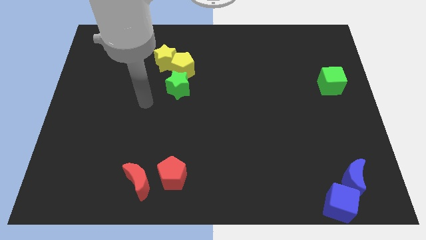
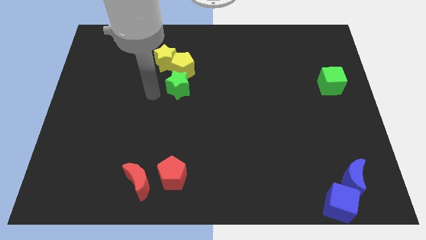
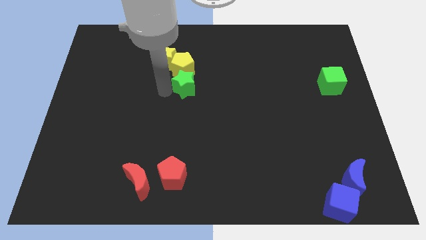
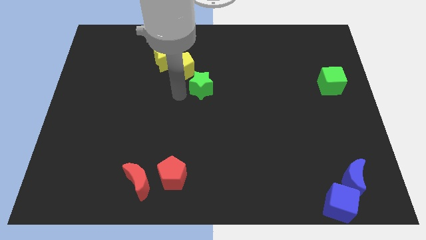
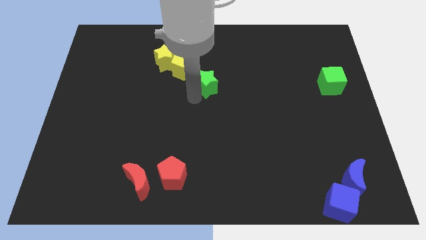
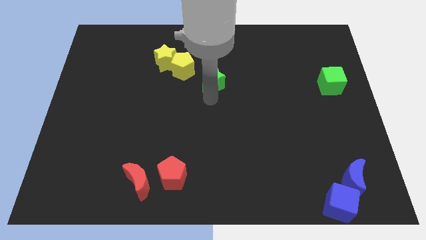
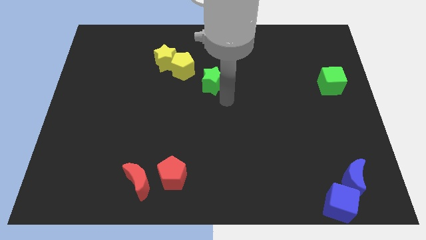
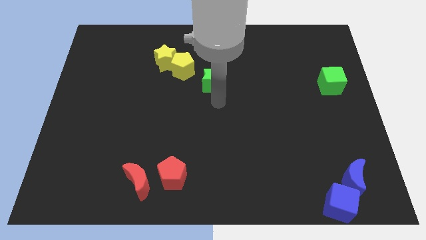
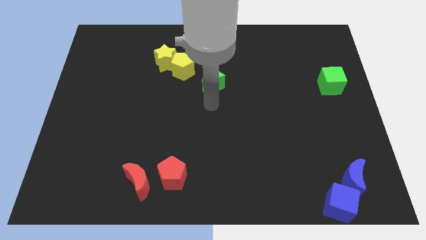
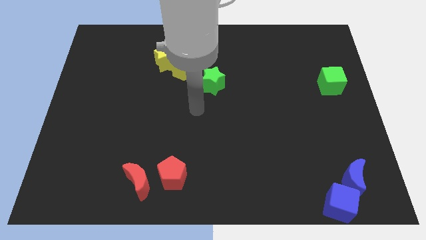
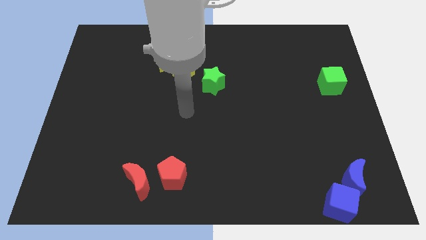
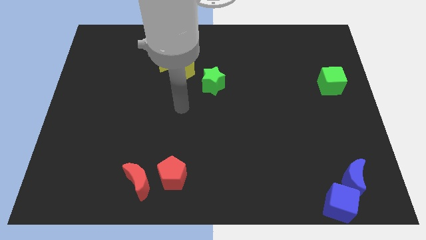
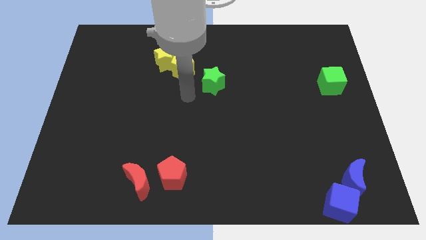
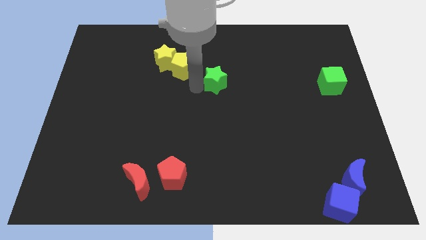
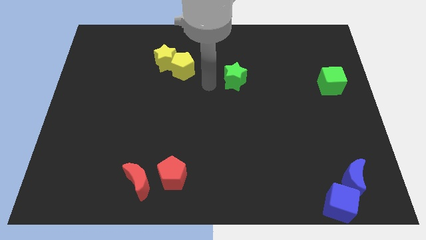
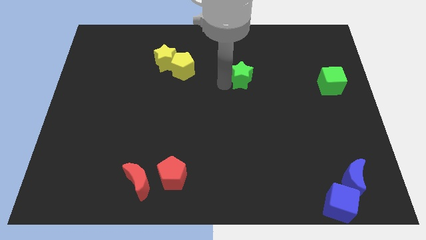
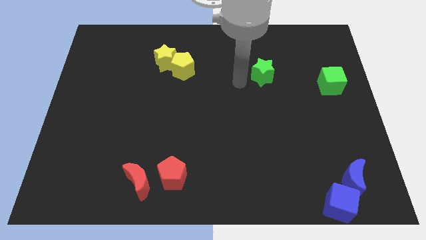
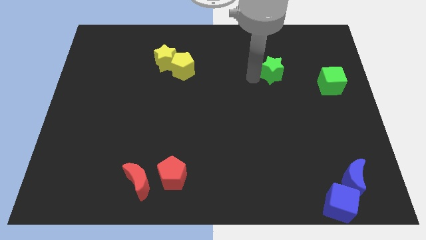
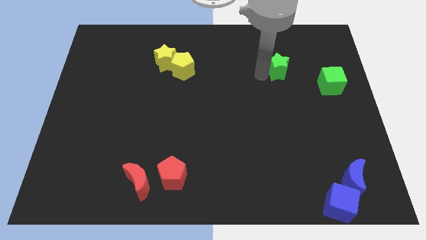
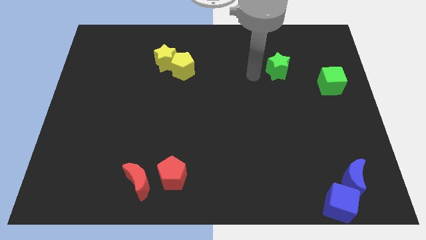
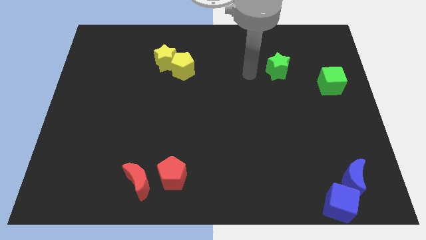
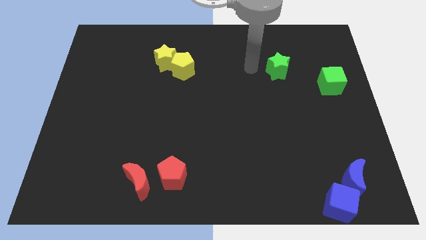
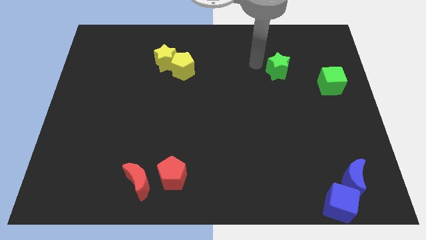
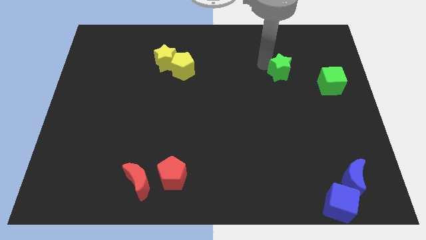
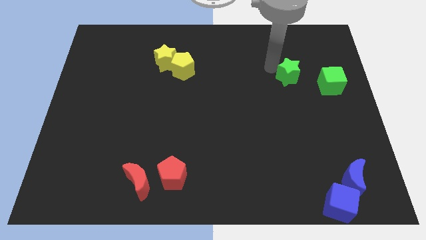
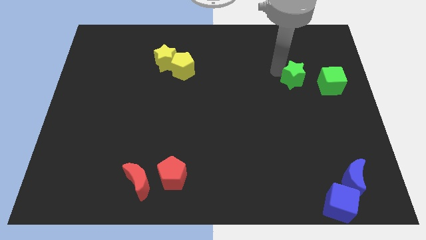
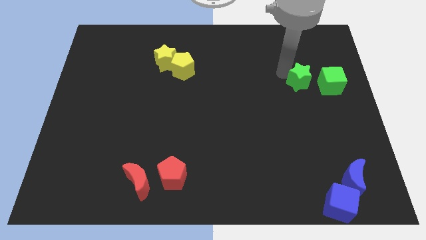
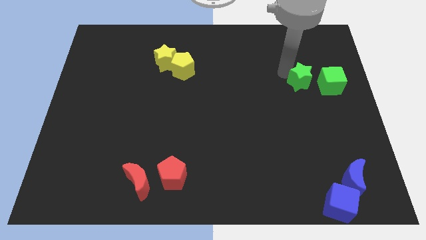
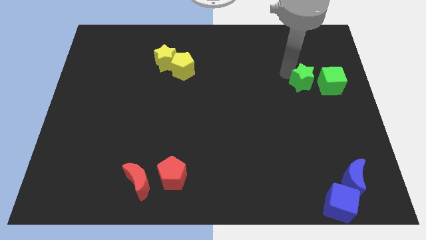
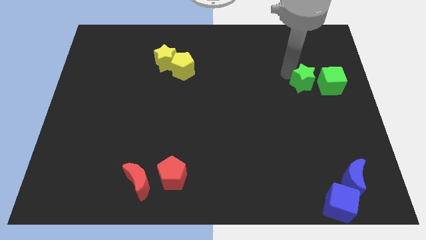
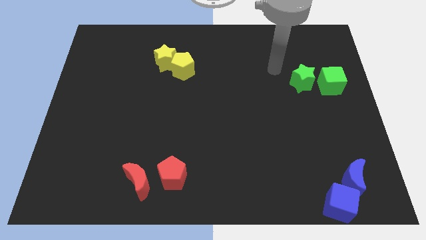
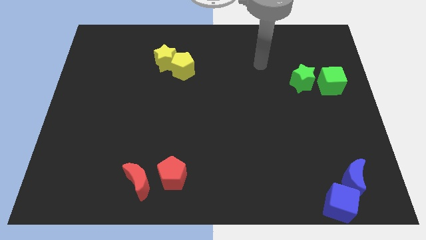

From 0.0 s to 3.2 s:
move the green star close to the green cube

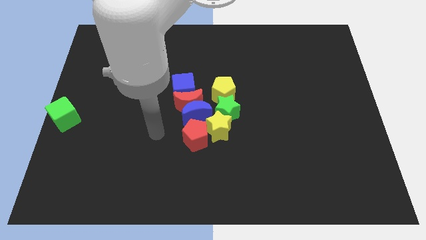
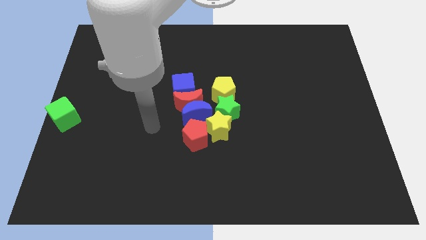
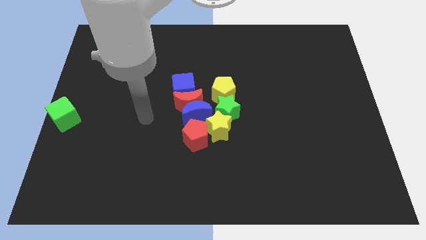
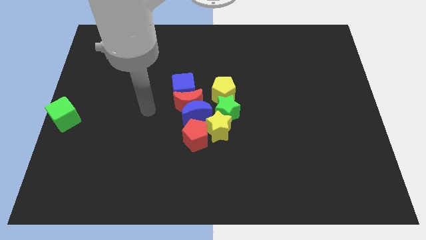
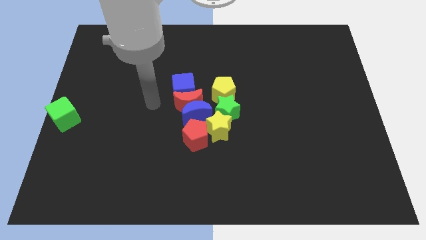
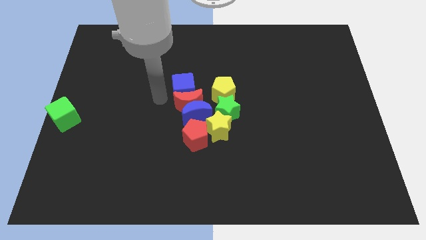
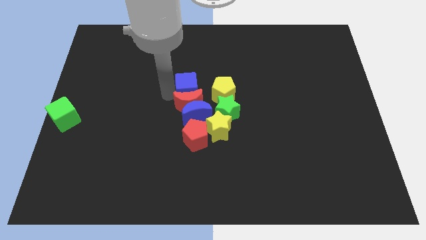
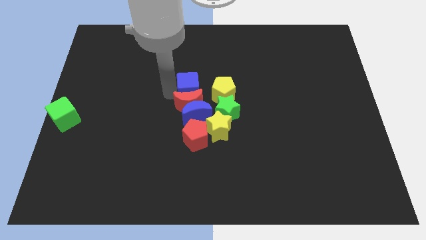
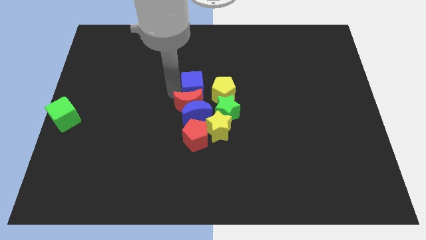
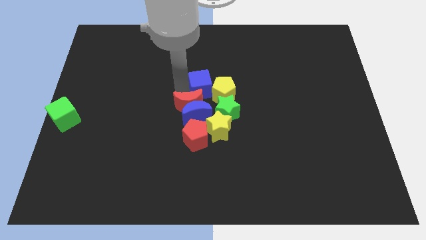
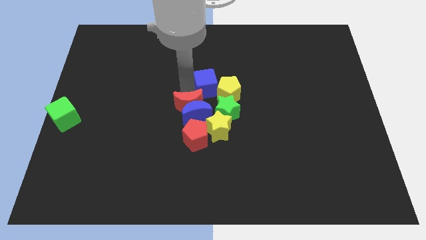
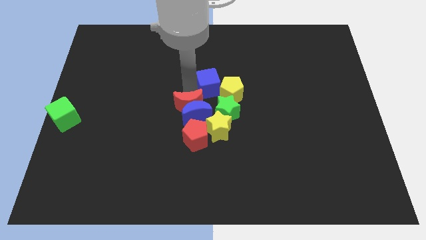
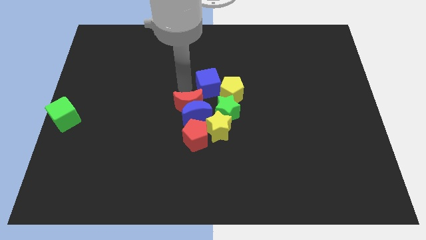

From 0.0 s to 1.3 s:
move the blue cube into the left side of the yellow pentagon

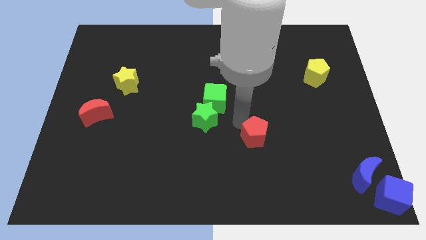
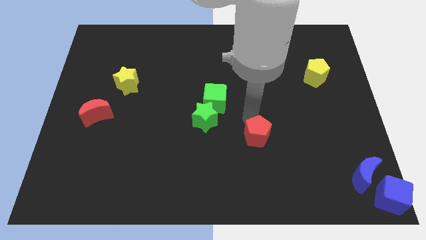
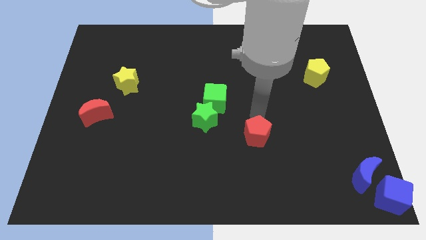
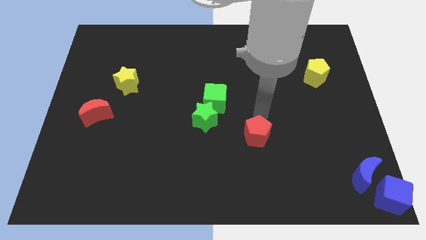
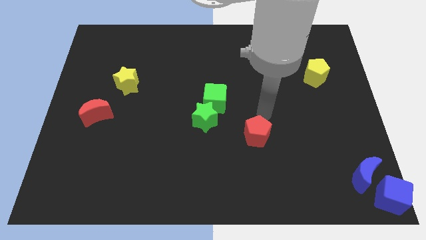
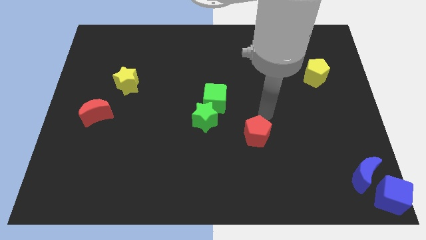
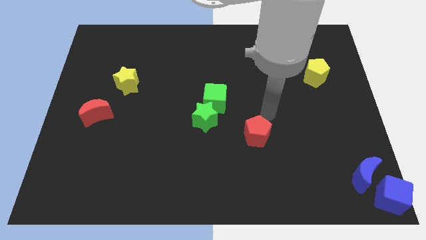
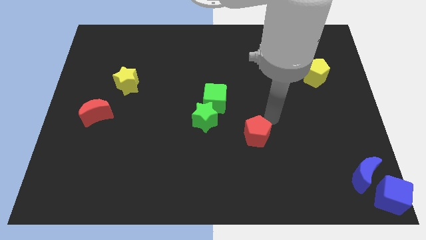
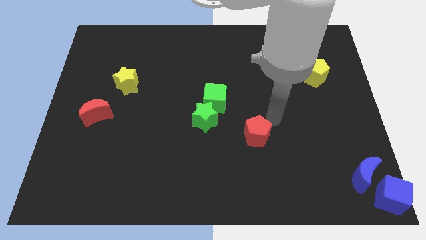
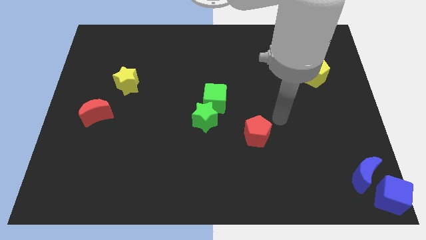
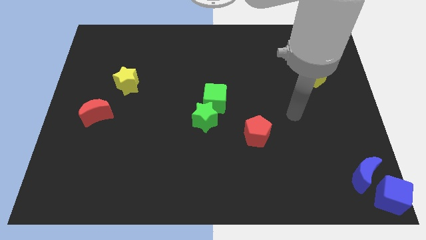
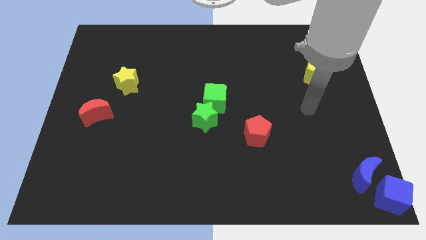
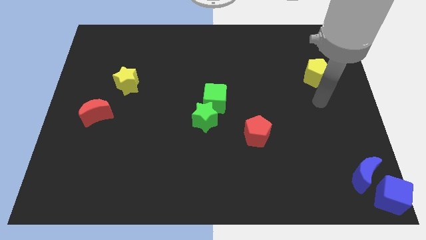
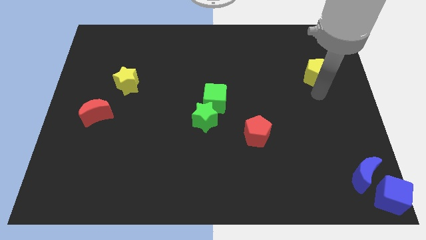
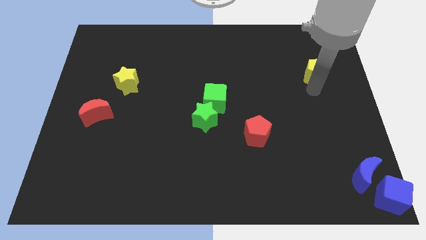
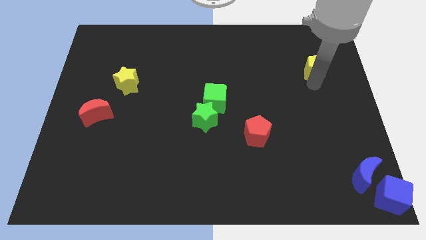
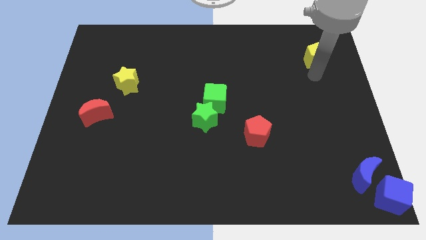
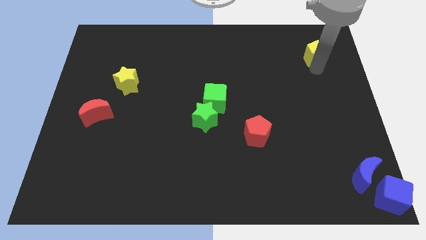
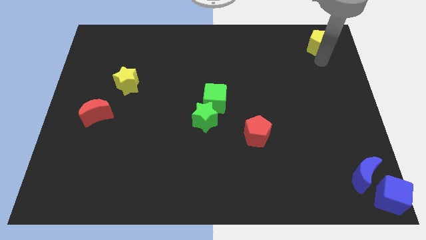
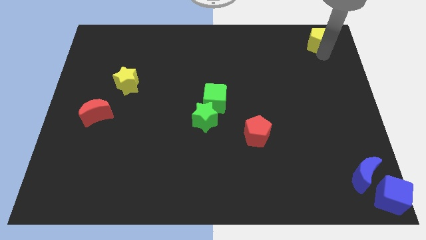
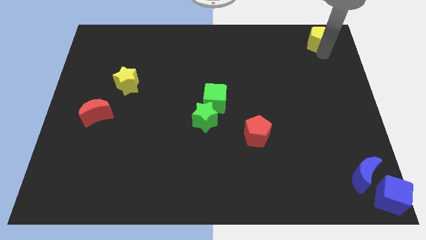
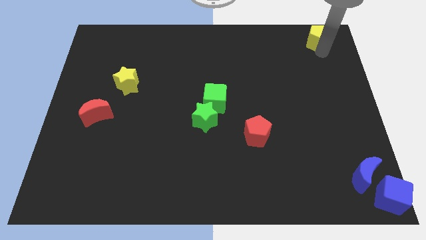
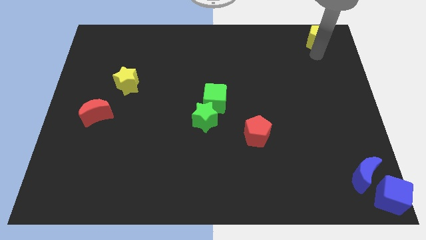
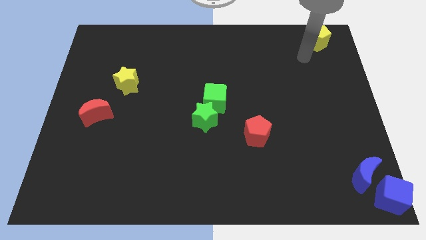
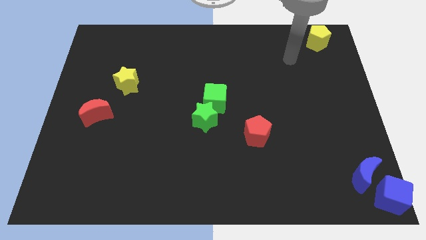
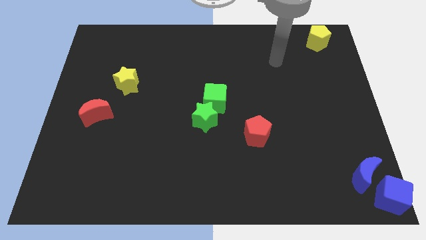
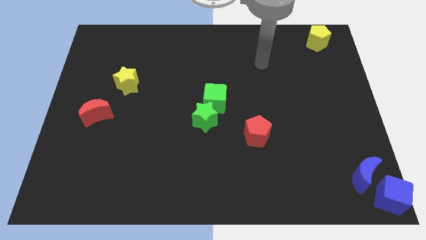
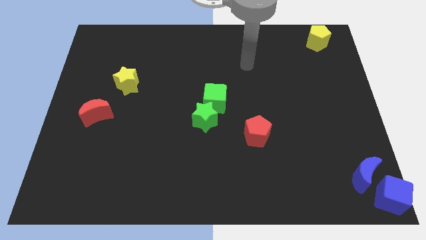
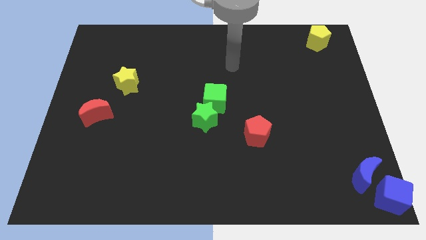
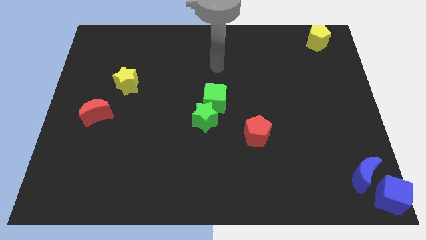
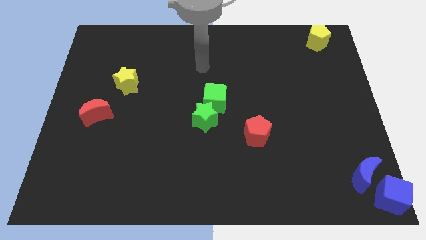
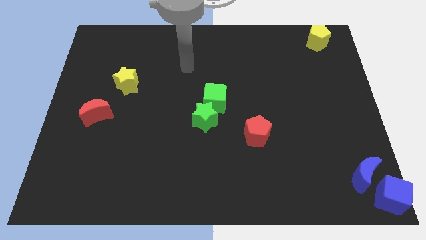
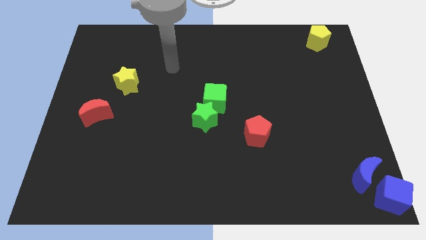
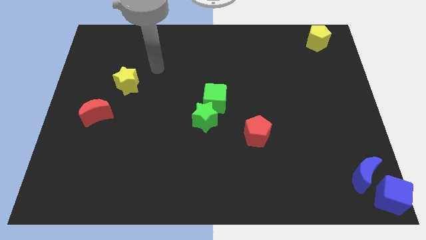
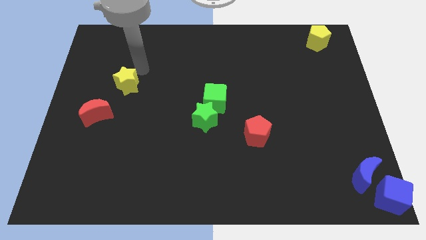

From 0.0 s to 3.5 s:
push yellow pentagon towards top right

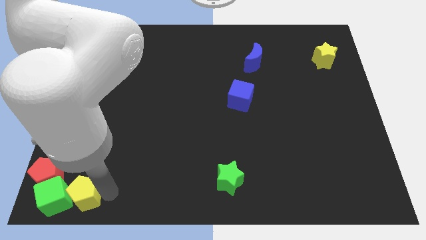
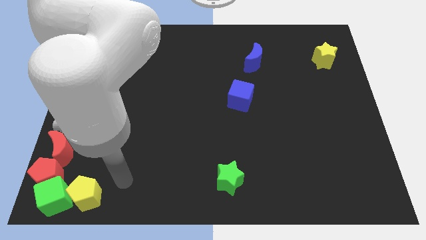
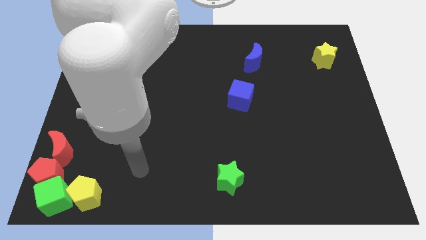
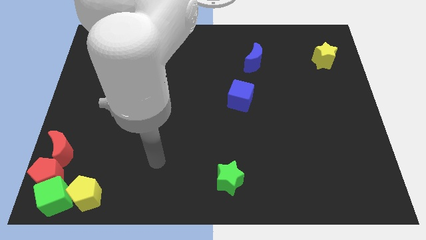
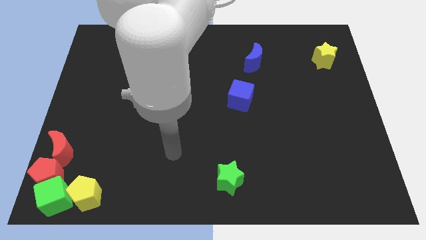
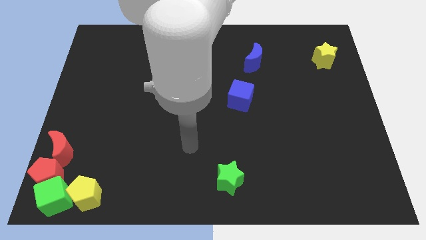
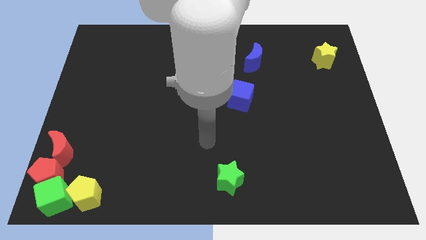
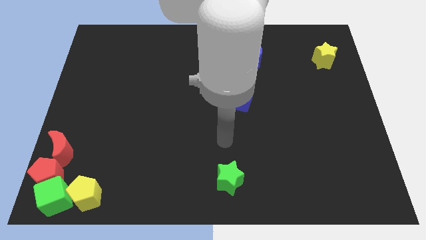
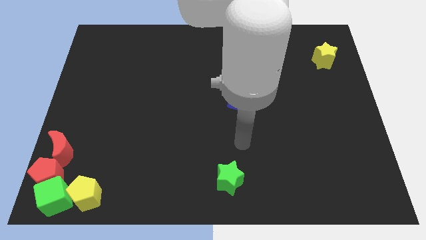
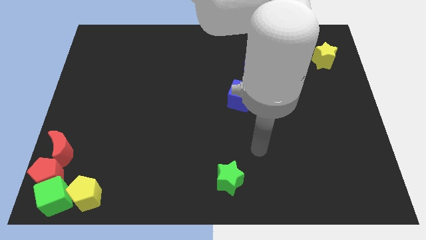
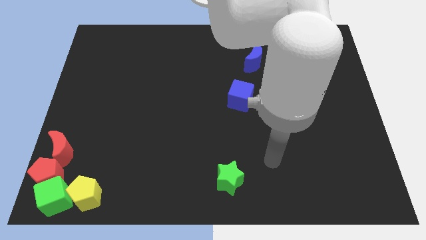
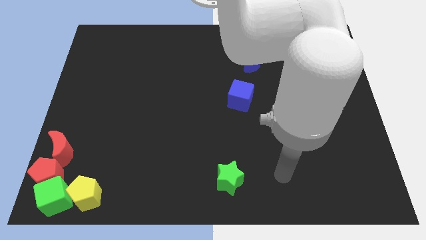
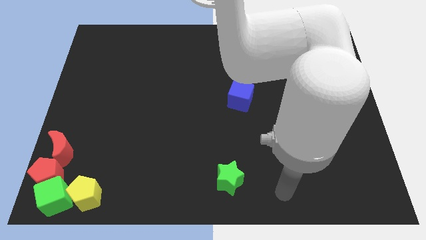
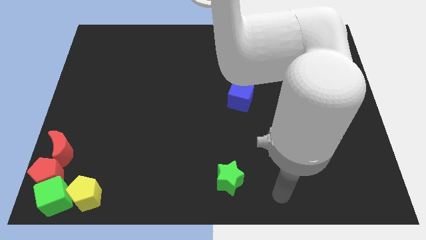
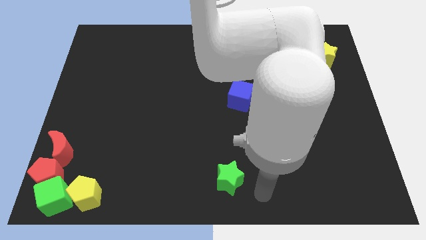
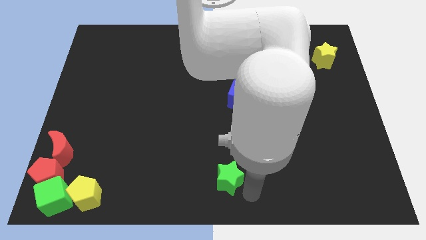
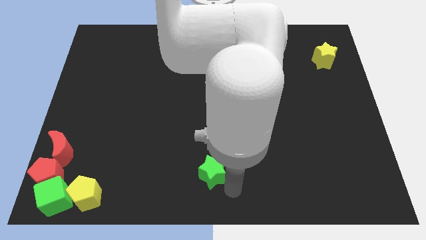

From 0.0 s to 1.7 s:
move your arm towards the bottom of the green star
